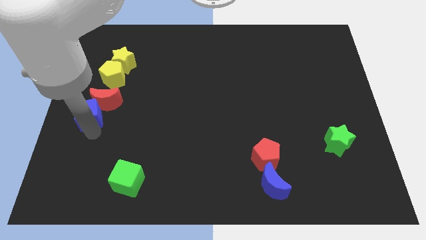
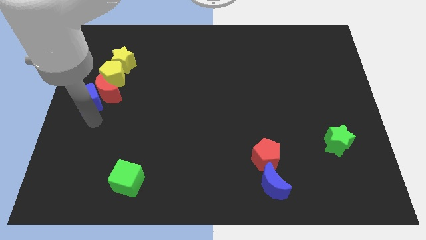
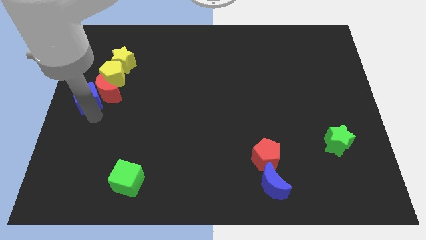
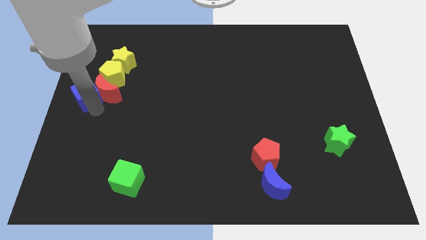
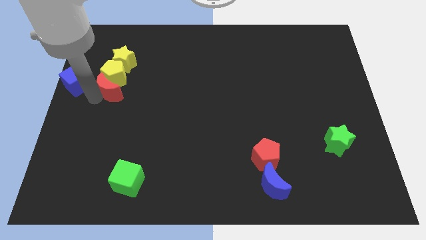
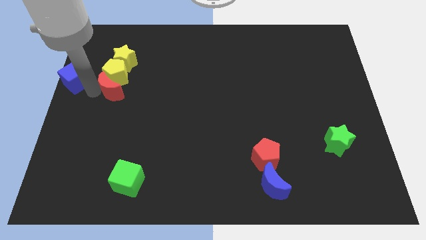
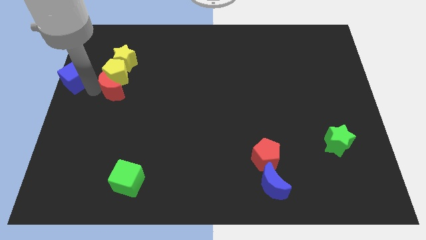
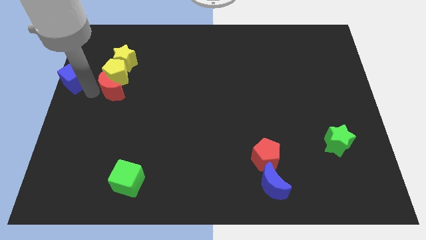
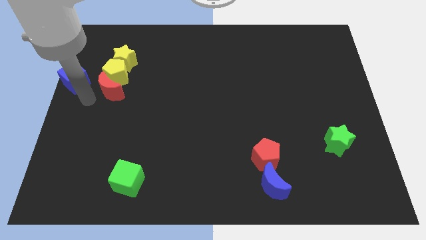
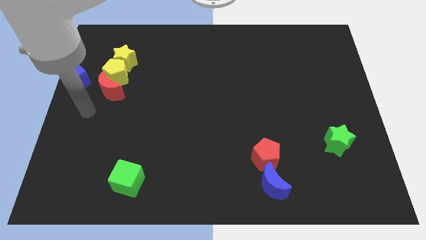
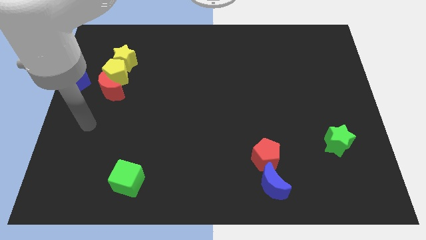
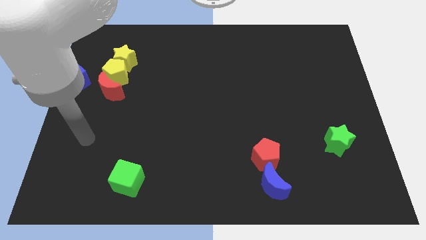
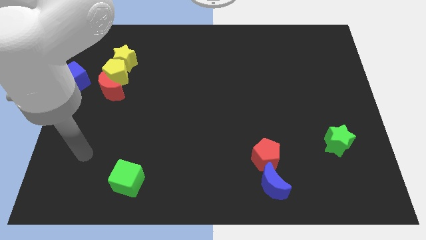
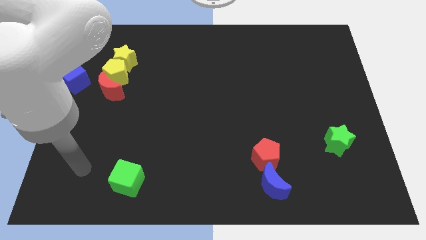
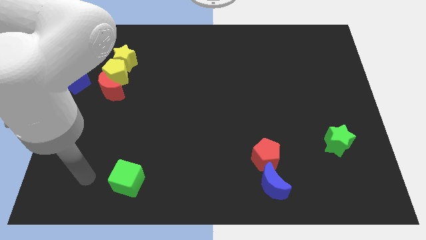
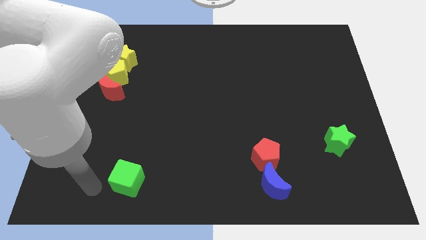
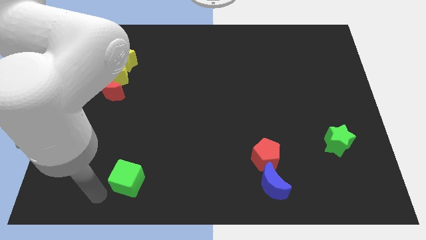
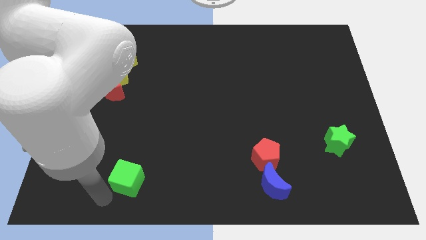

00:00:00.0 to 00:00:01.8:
move the blue cube to the left of the red moon

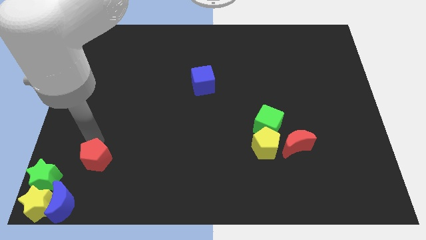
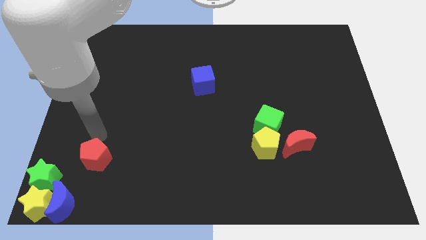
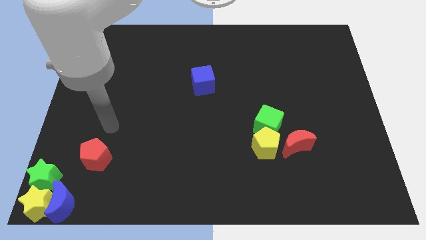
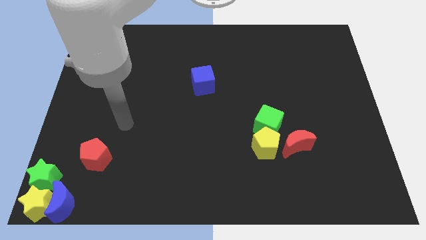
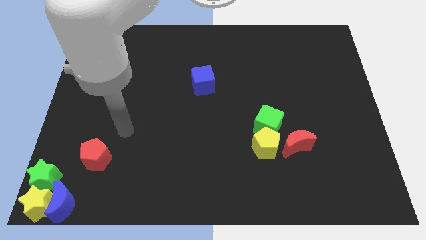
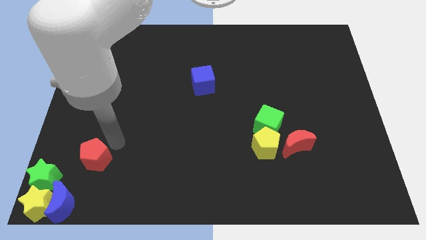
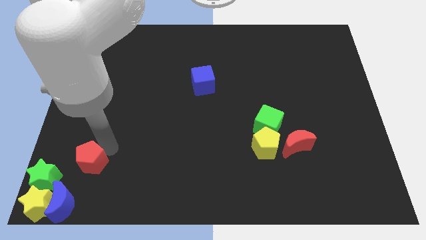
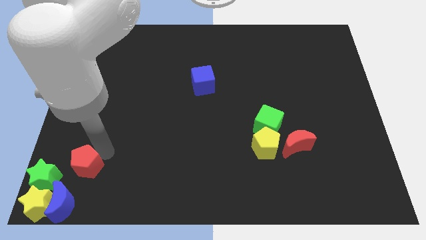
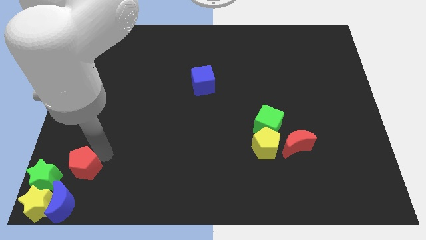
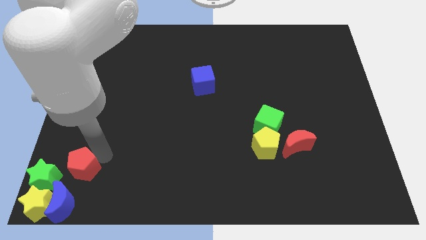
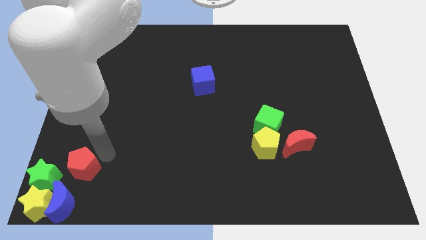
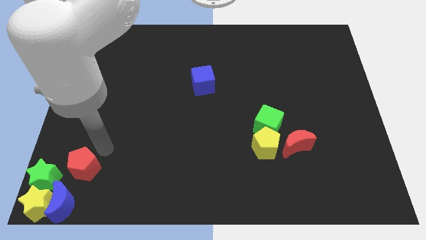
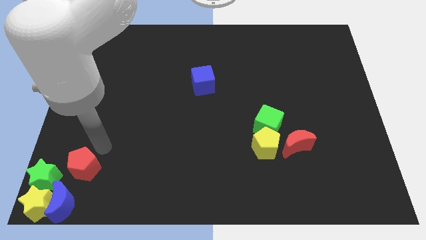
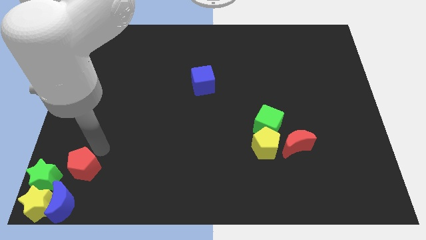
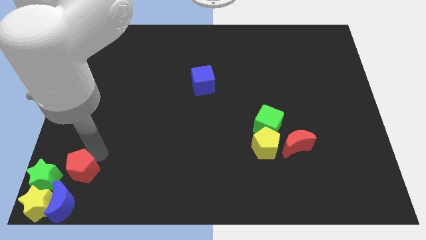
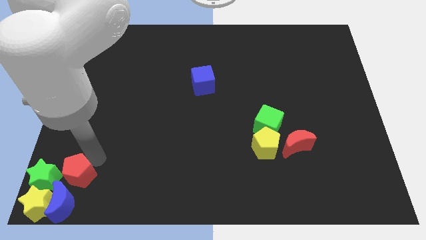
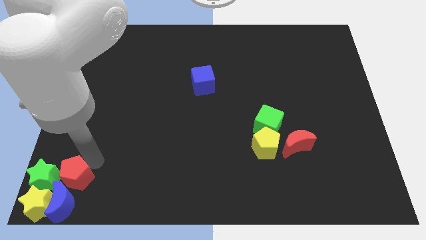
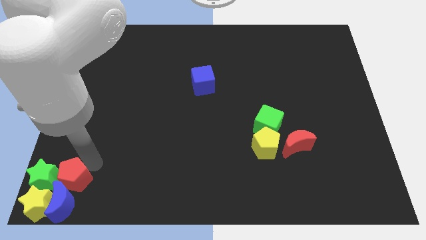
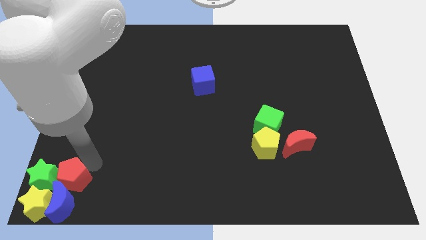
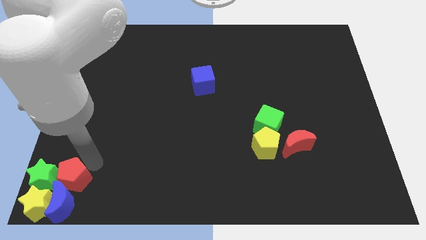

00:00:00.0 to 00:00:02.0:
place the red pentagon to the right side of the green star

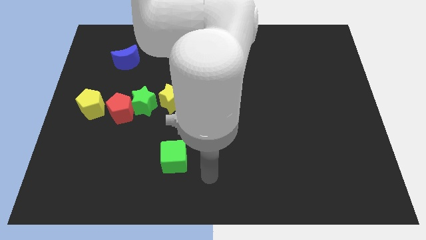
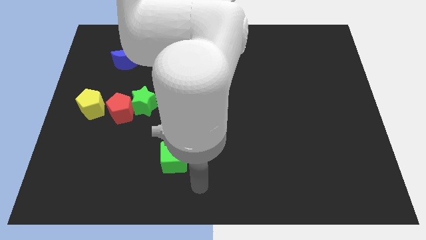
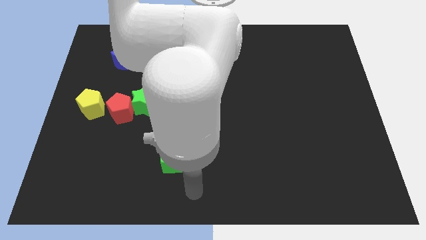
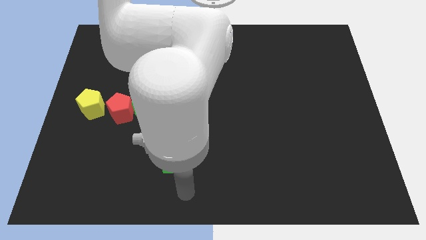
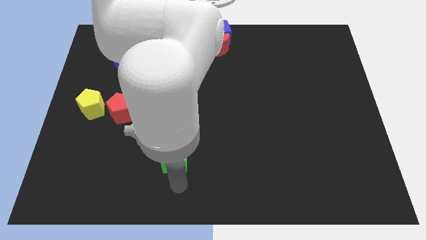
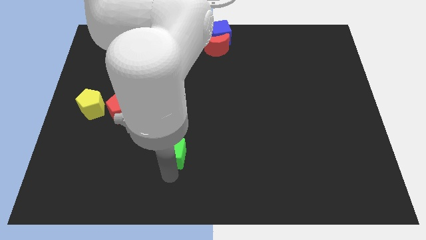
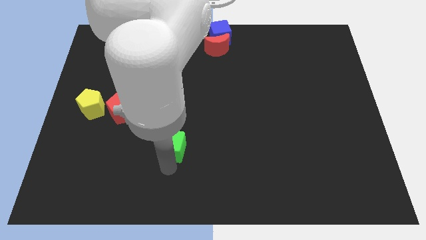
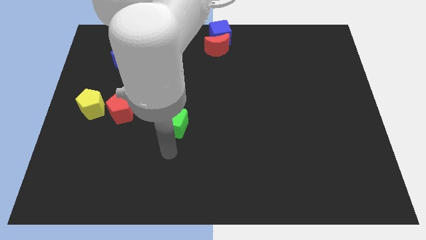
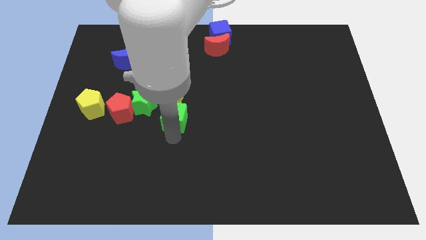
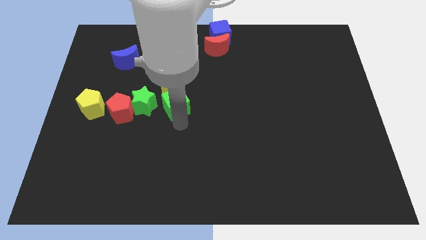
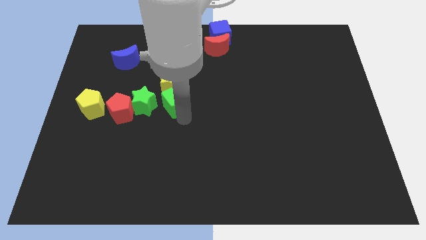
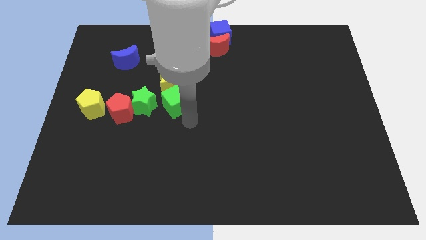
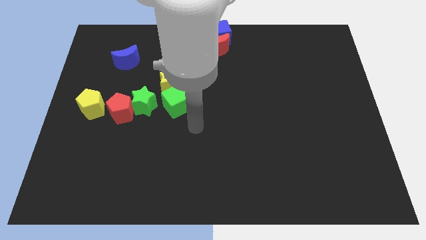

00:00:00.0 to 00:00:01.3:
push green cube in to yellow star

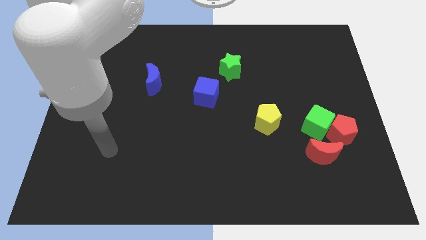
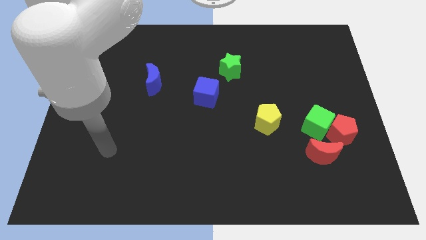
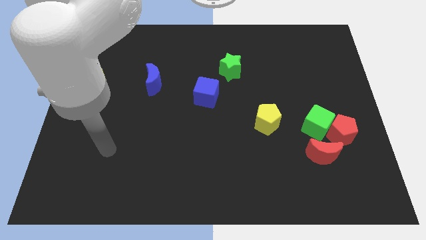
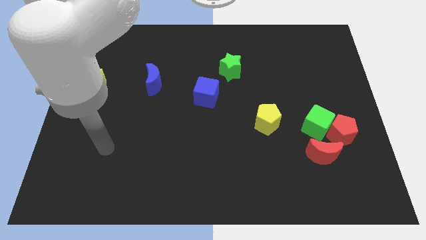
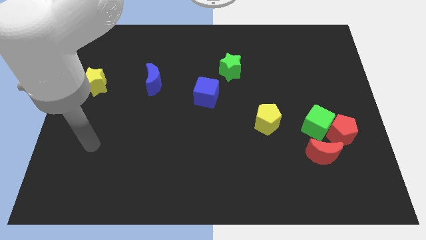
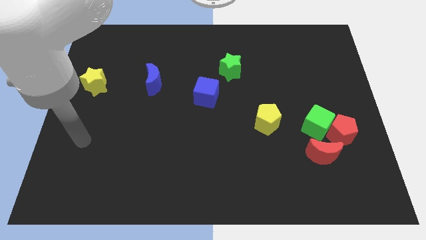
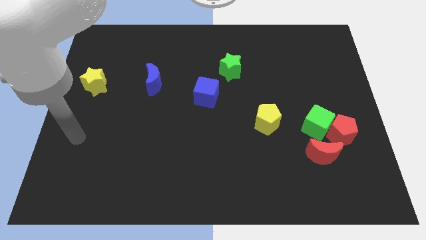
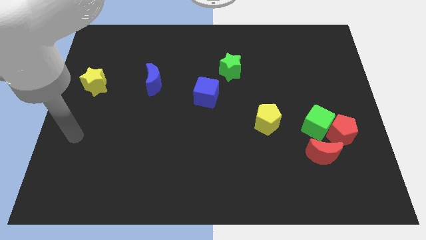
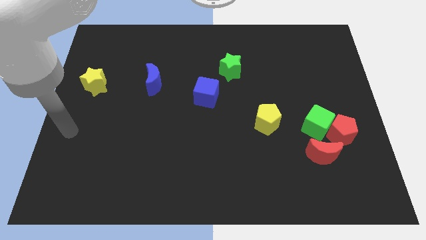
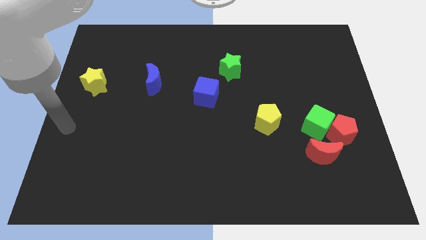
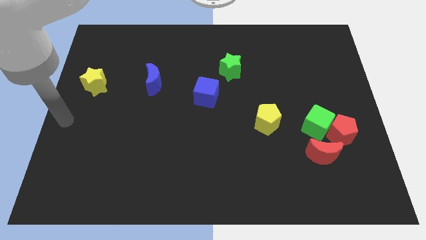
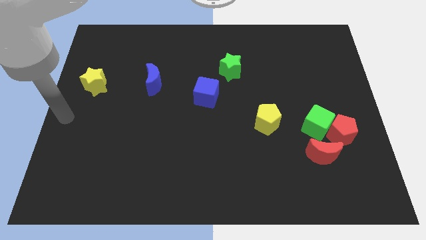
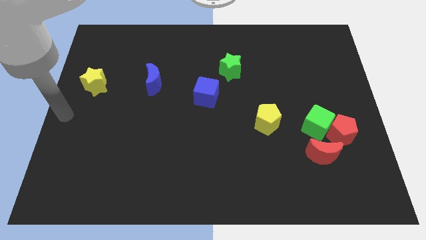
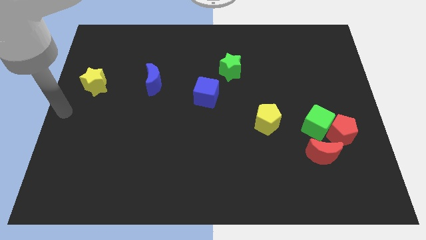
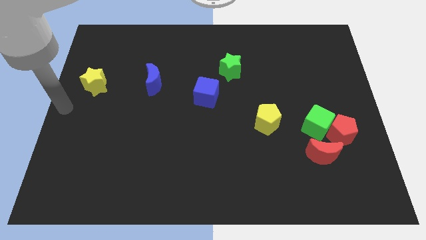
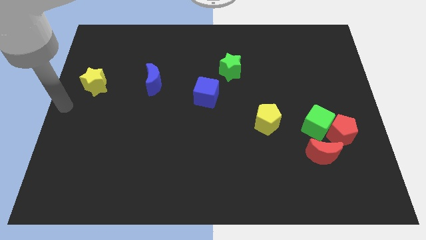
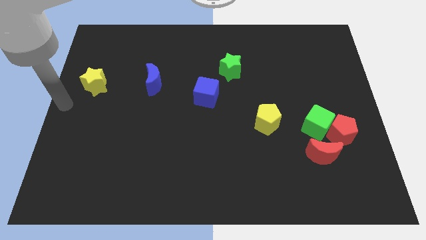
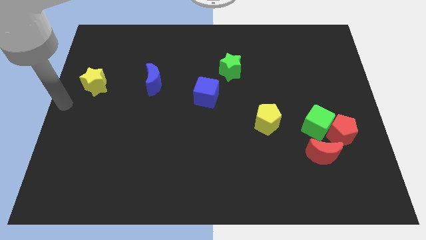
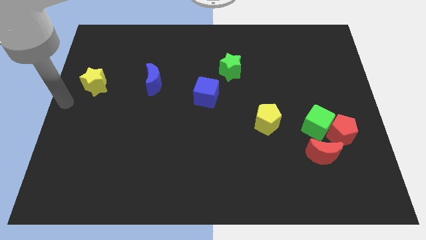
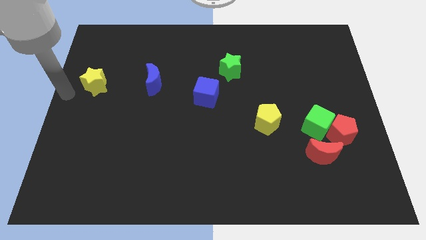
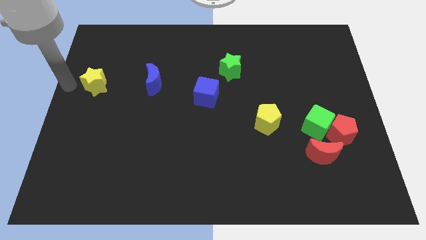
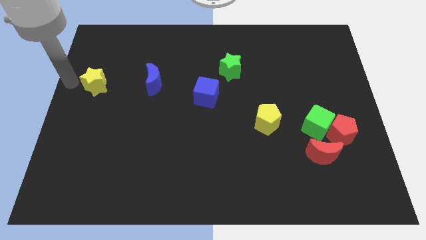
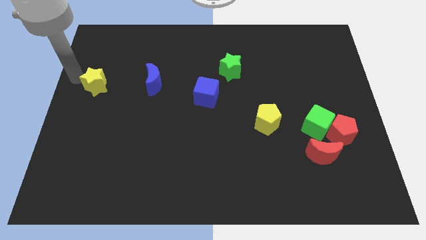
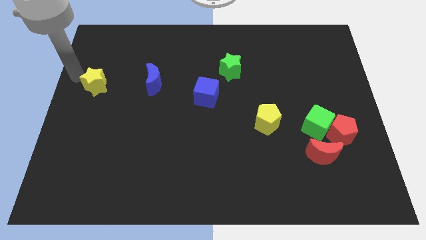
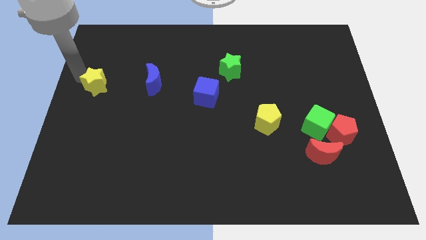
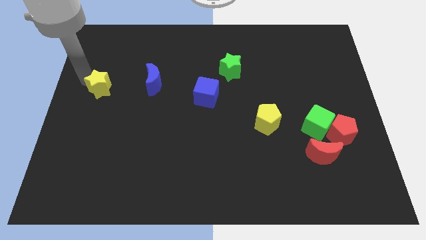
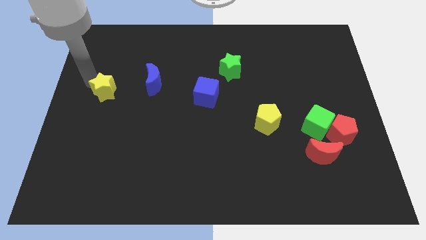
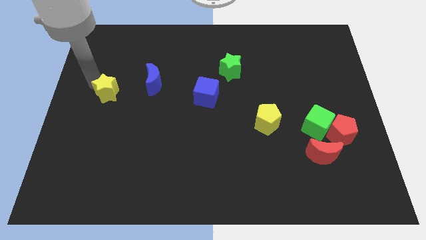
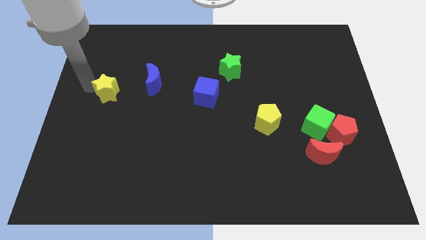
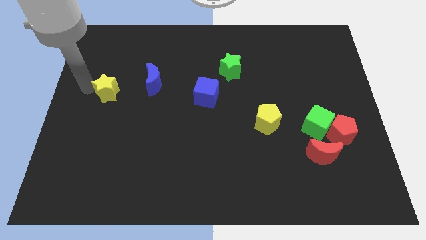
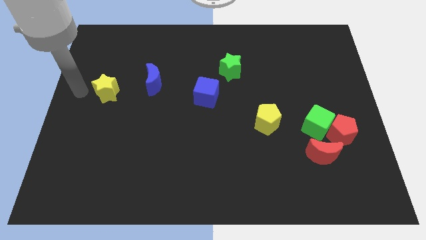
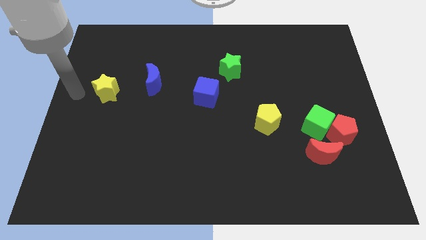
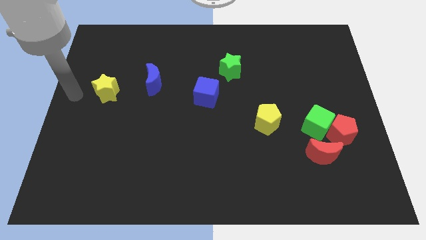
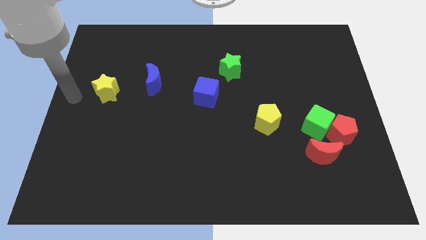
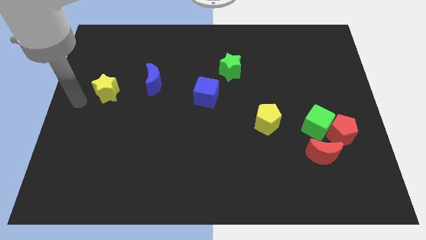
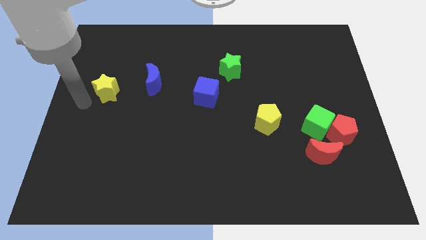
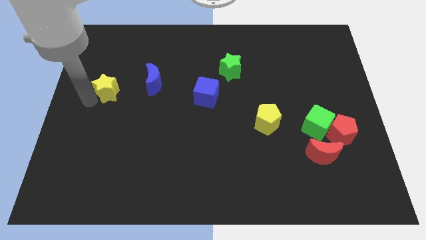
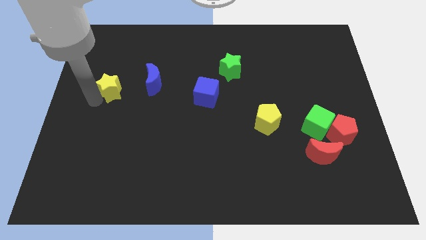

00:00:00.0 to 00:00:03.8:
move the yellow star slightly to the right
